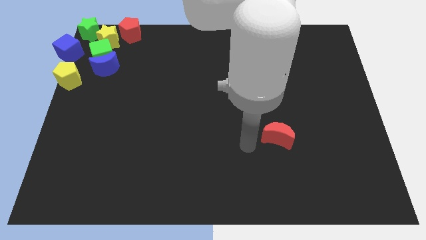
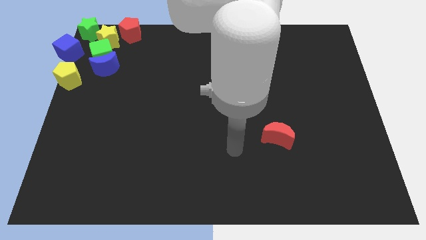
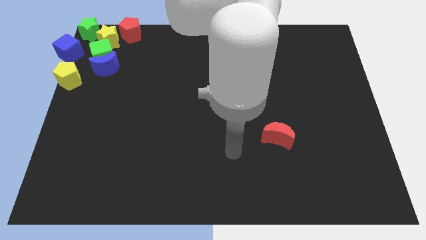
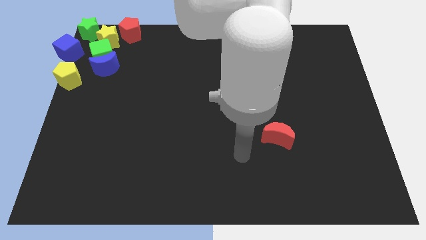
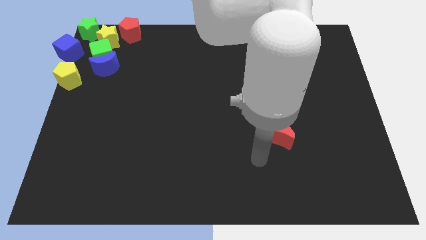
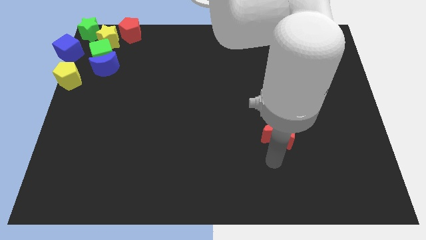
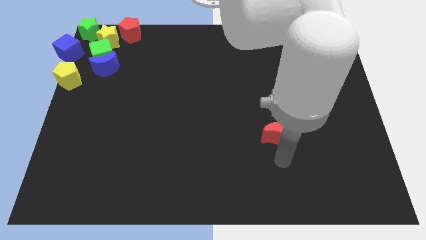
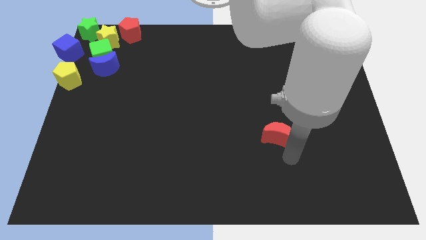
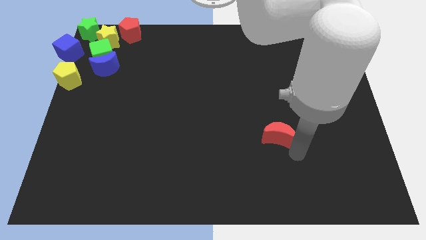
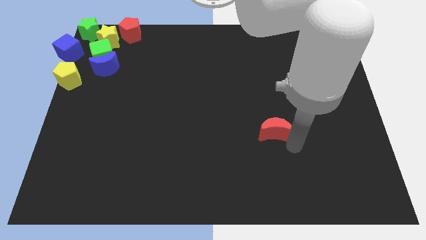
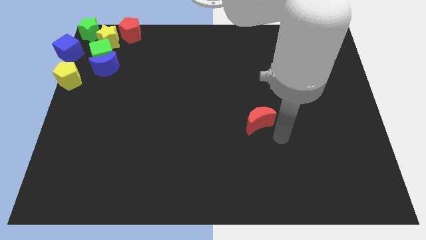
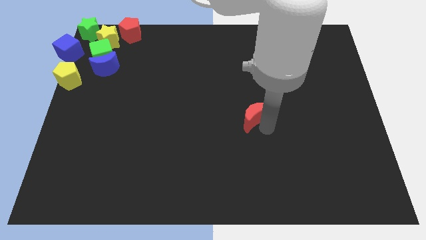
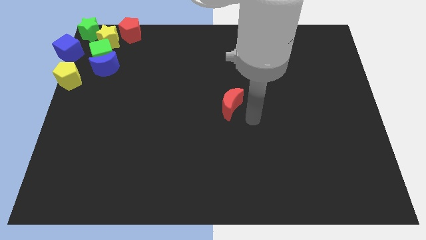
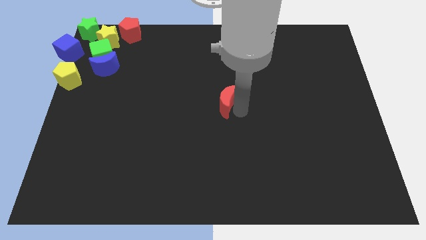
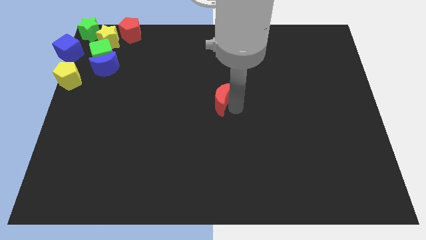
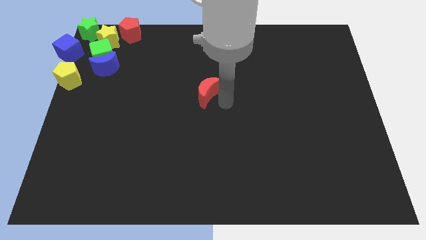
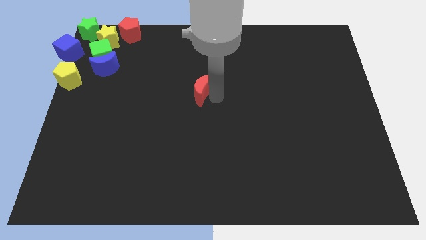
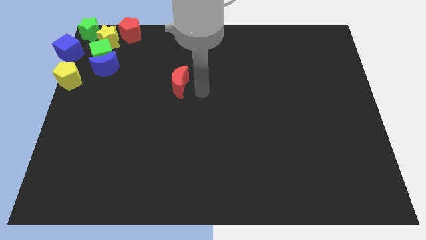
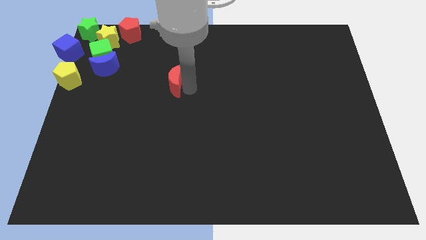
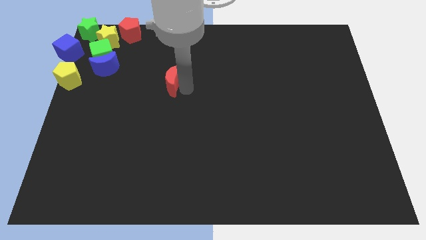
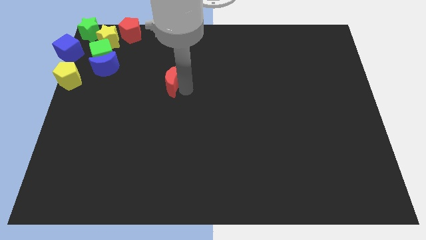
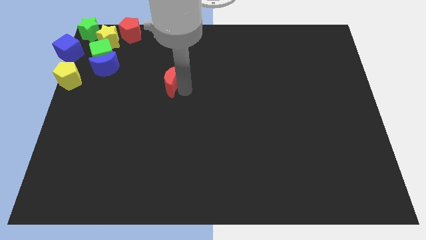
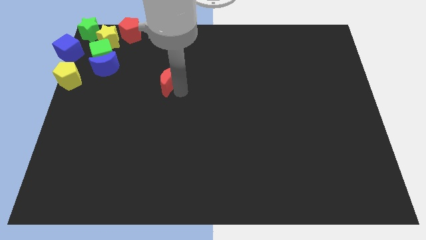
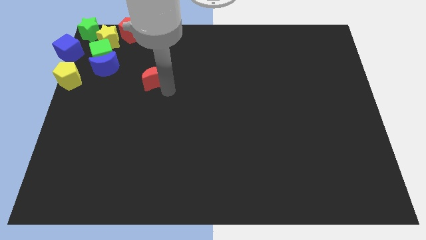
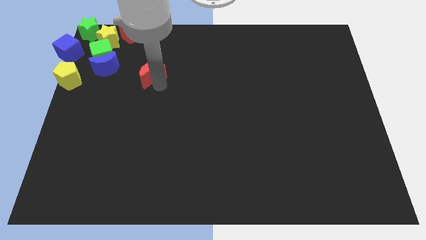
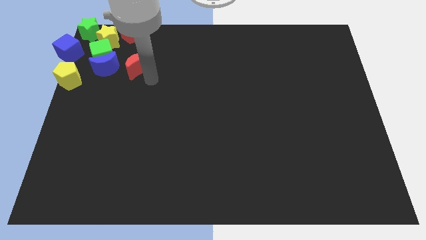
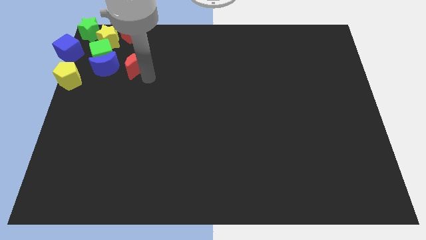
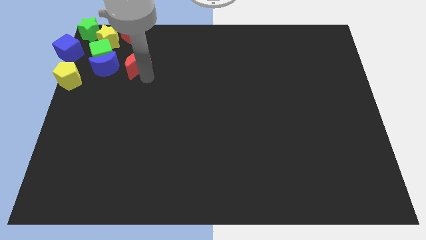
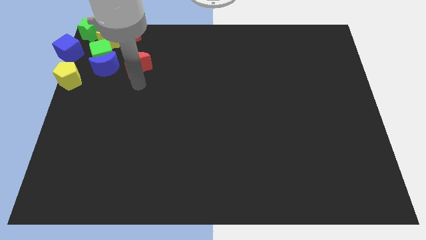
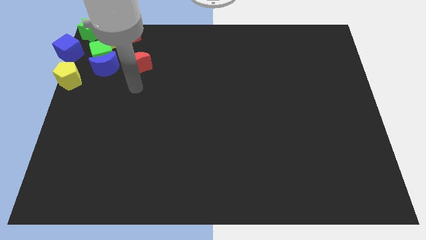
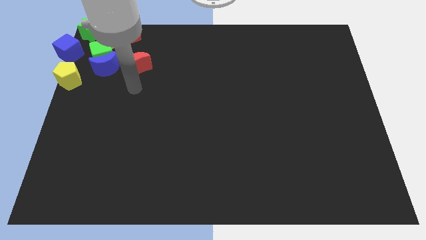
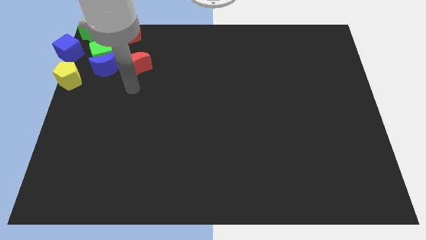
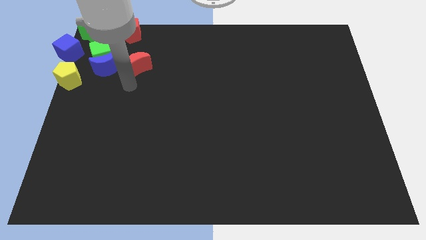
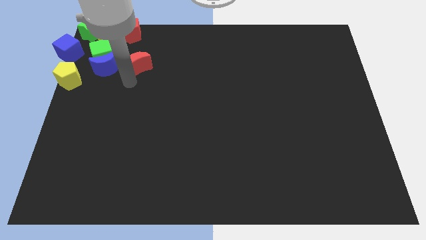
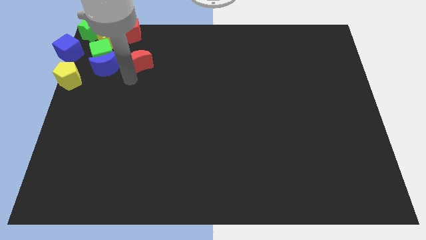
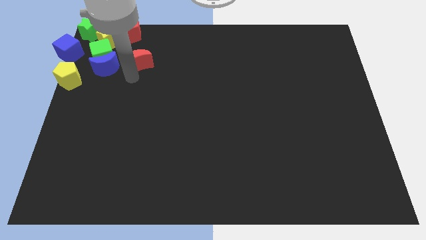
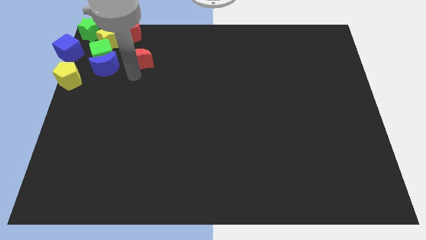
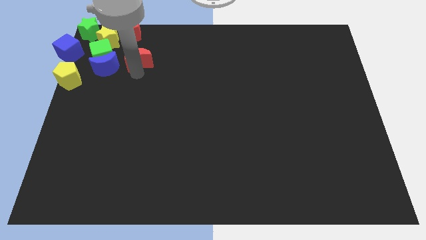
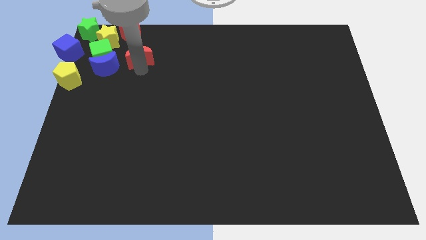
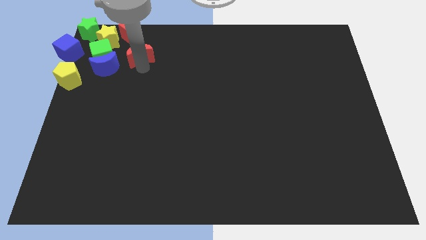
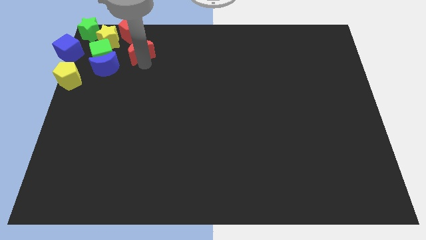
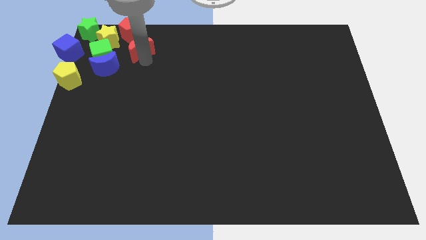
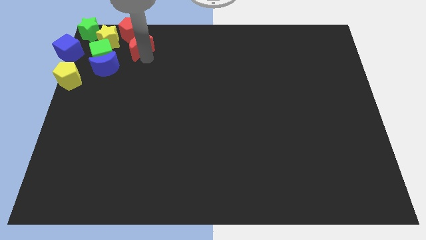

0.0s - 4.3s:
push the red crescent to the bottom right of red pentagon

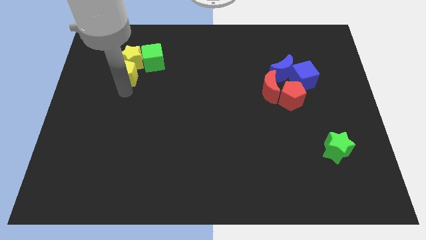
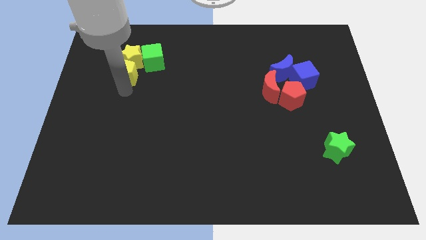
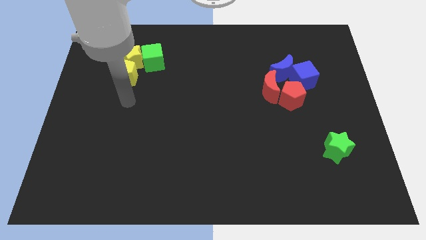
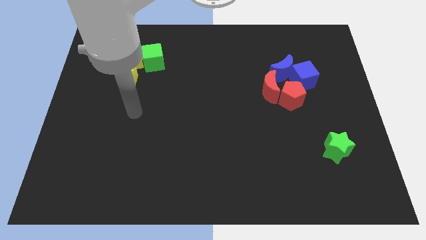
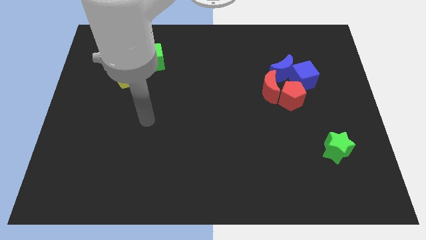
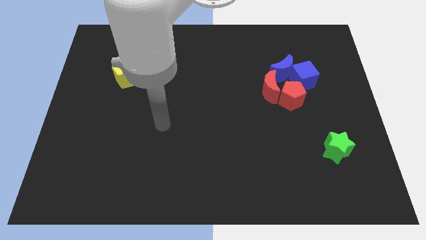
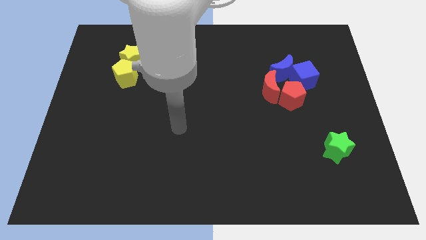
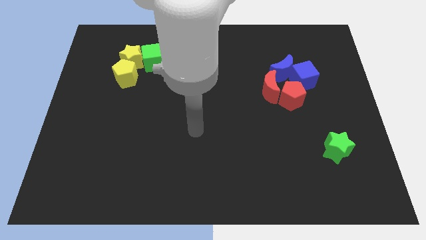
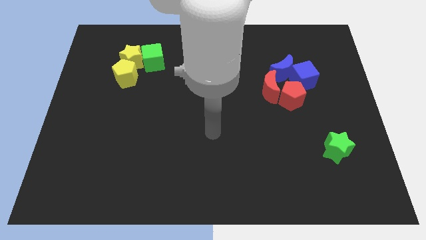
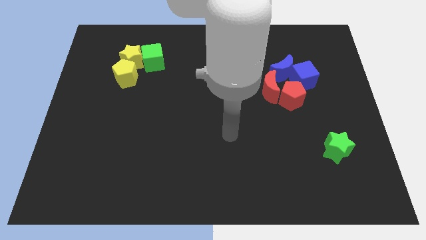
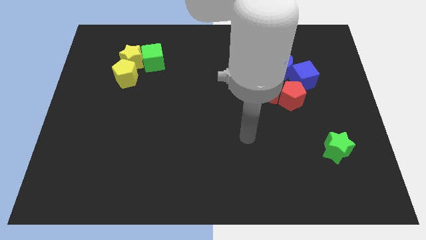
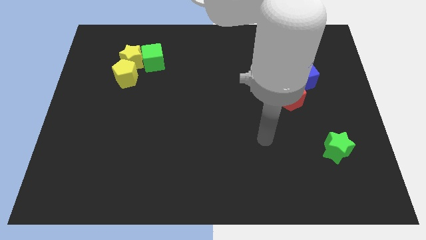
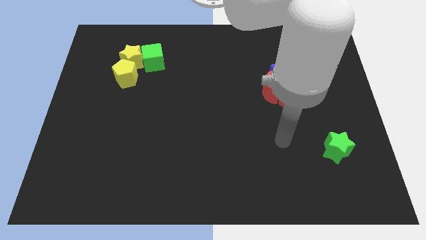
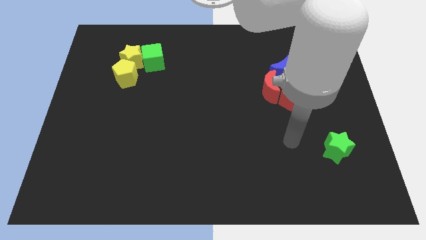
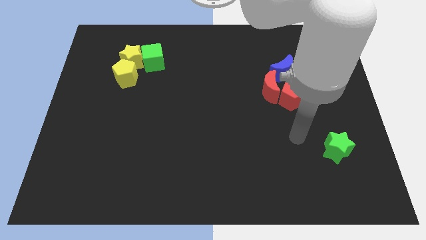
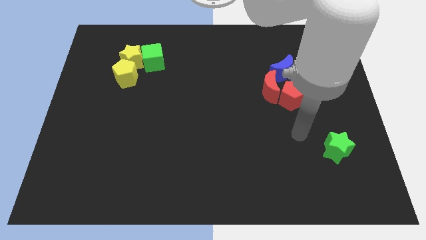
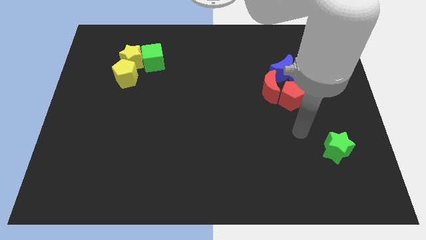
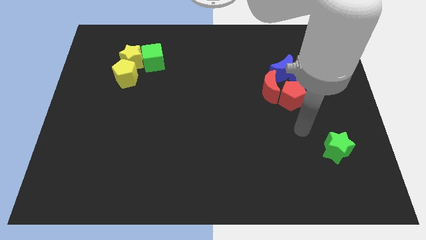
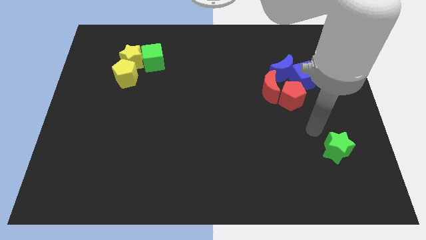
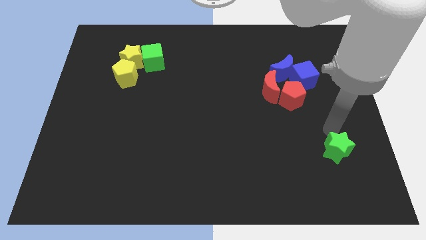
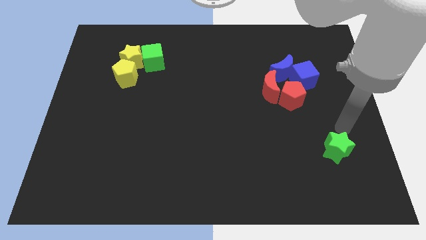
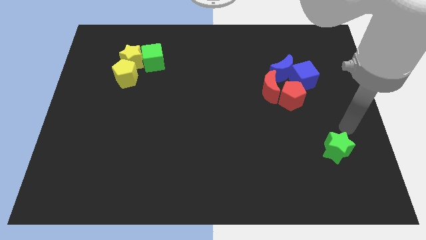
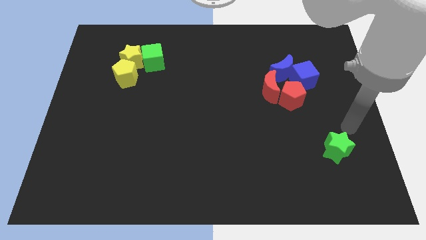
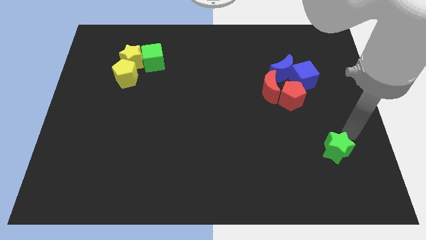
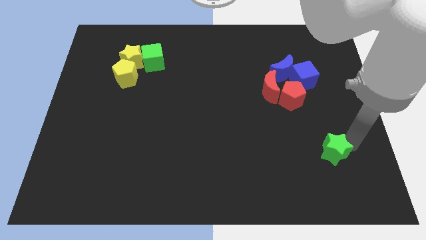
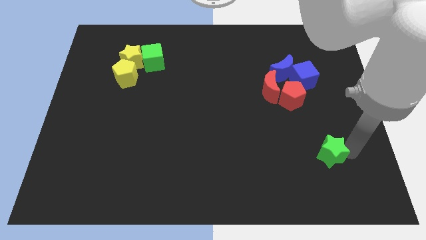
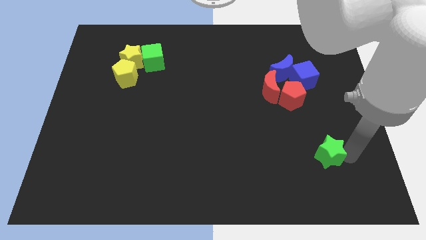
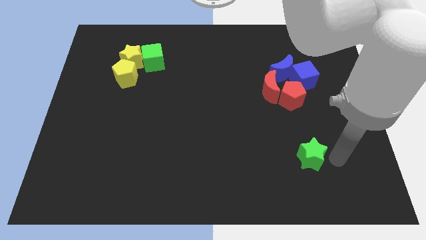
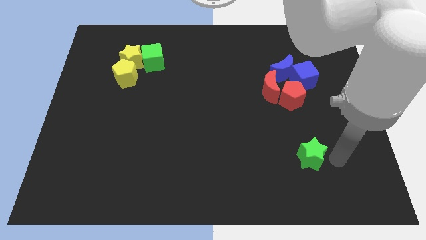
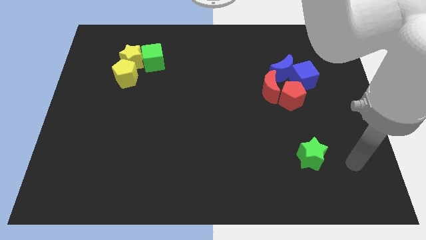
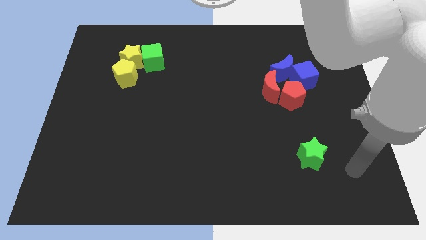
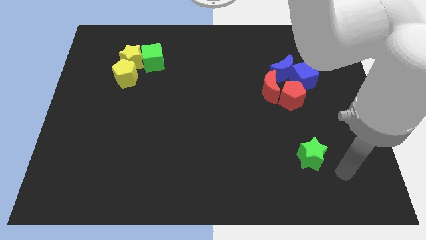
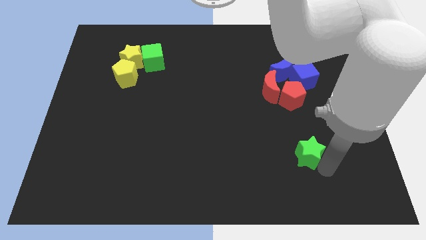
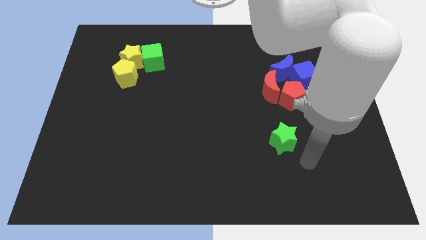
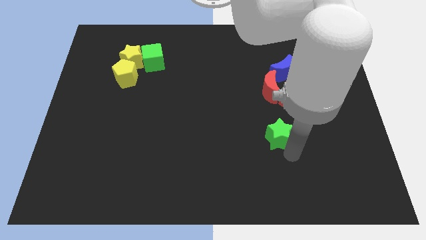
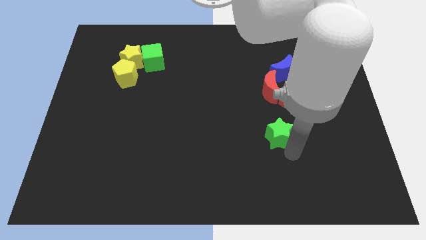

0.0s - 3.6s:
move the green star to the bottom side of the group of blocks

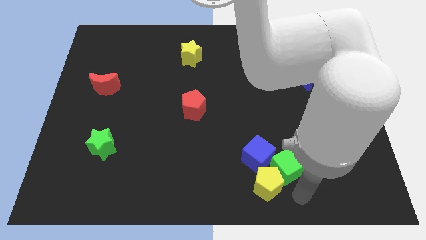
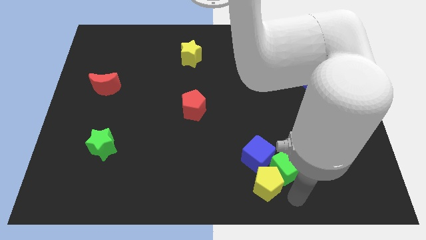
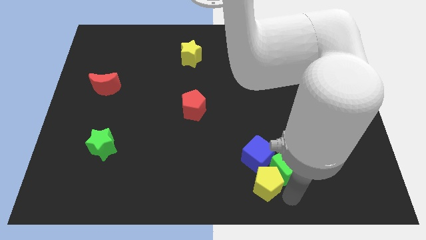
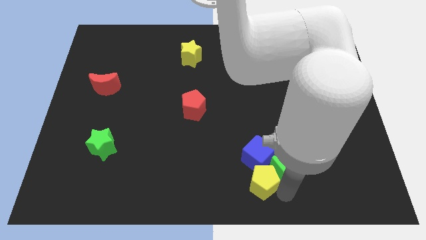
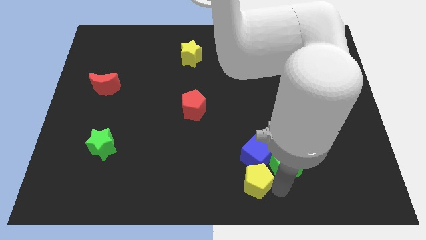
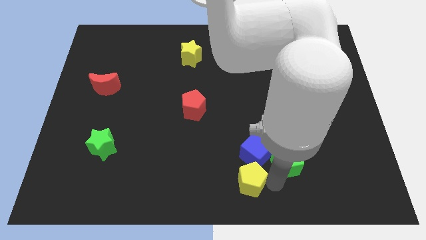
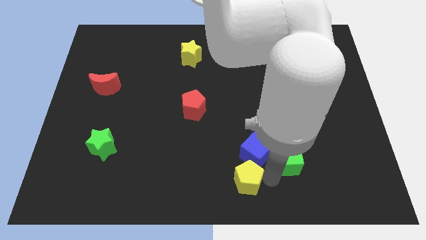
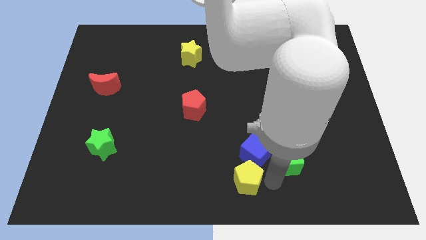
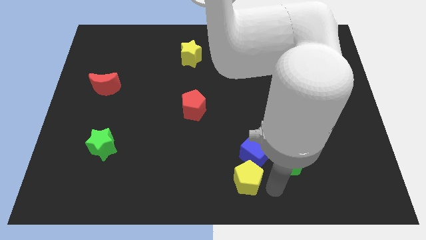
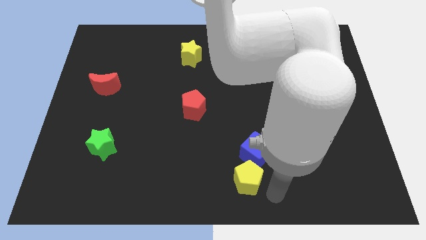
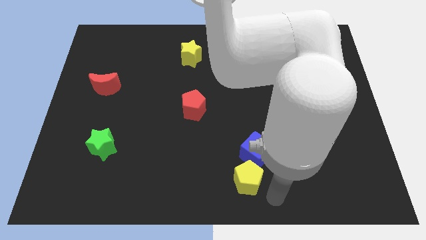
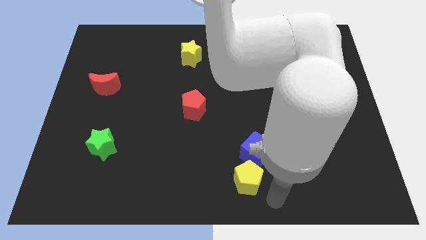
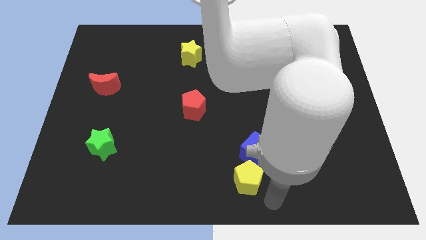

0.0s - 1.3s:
separate yellow pentagon from green cube
